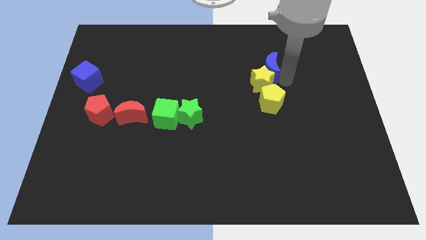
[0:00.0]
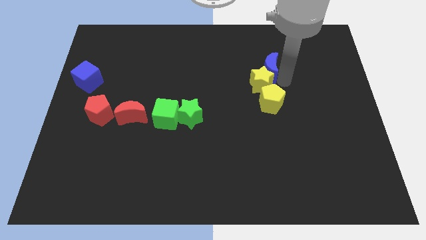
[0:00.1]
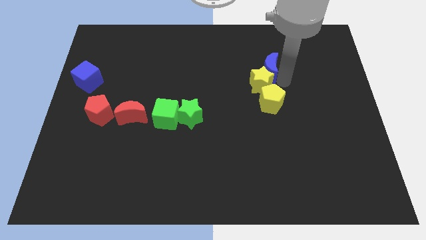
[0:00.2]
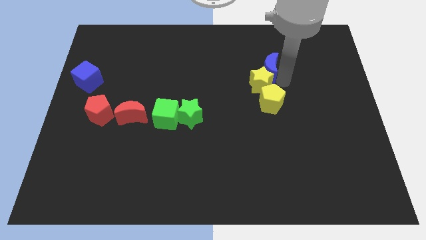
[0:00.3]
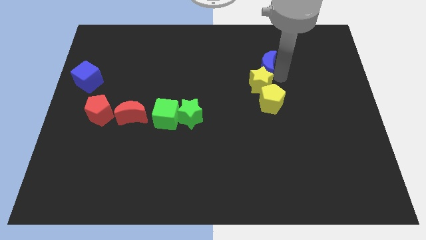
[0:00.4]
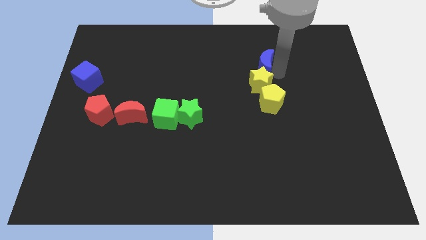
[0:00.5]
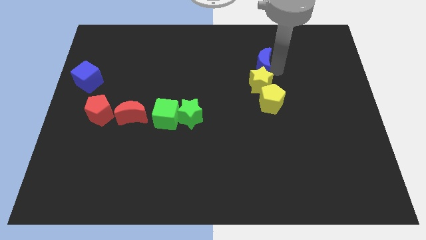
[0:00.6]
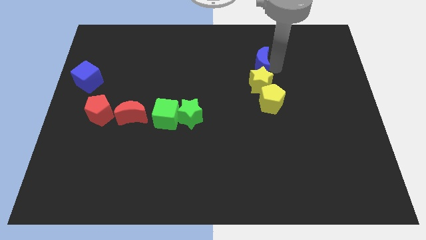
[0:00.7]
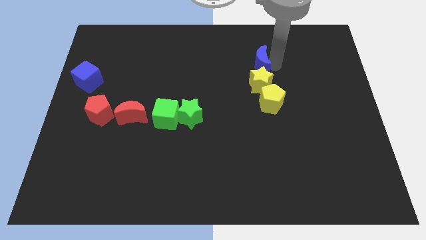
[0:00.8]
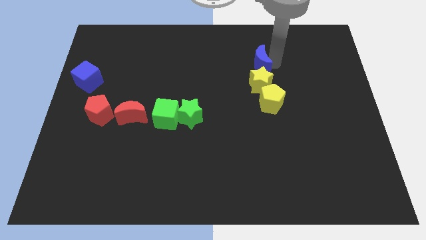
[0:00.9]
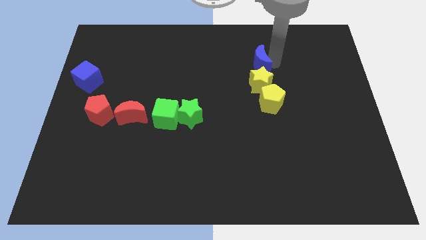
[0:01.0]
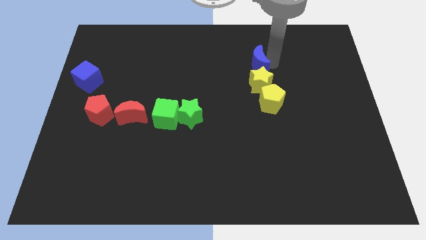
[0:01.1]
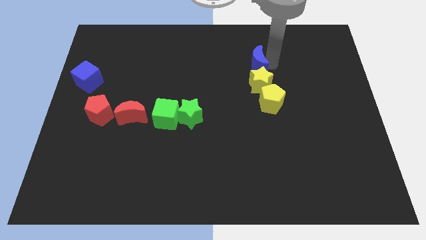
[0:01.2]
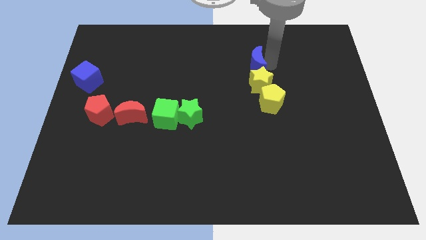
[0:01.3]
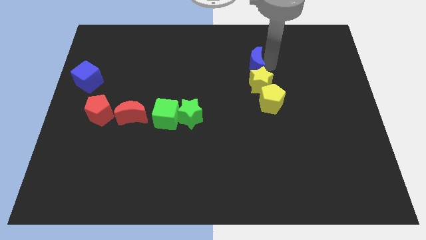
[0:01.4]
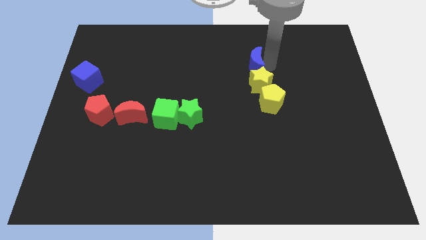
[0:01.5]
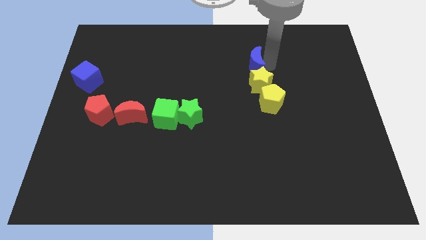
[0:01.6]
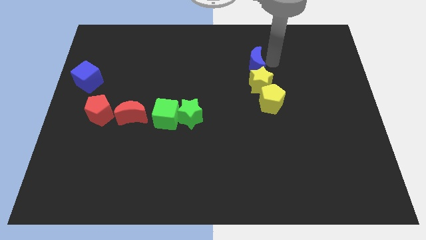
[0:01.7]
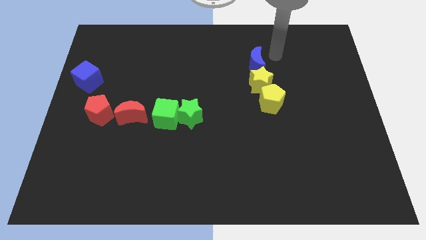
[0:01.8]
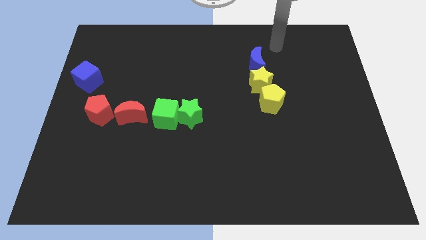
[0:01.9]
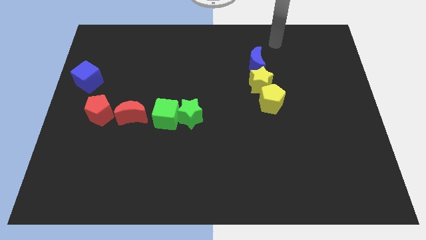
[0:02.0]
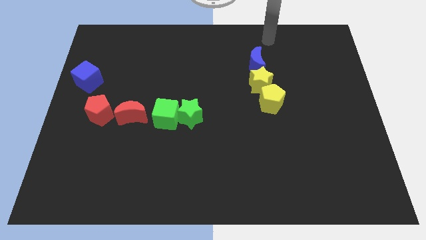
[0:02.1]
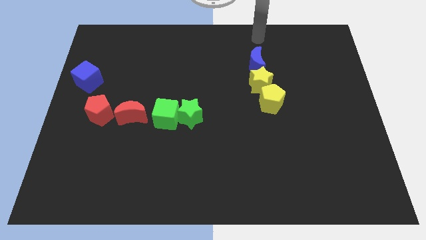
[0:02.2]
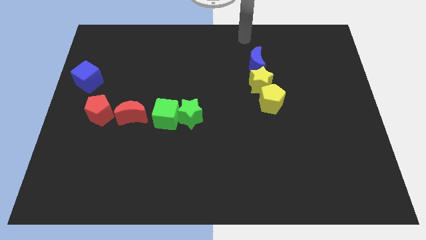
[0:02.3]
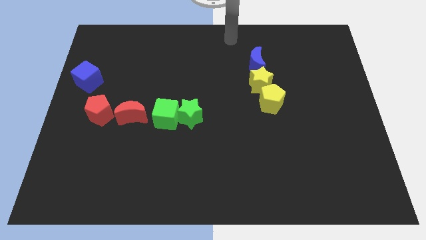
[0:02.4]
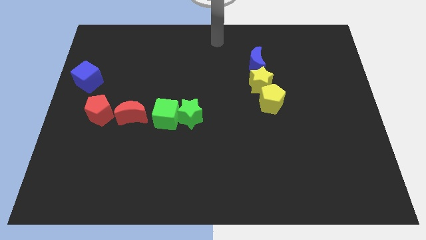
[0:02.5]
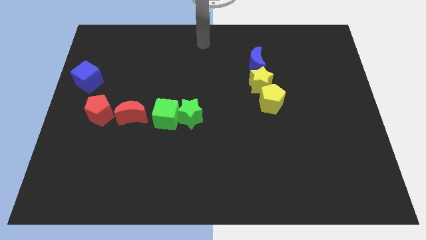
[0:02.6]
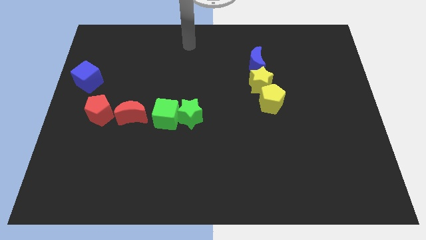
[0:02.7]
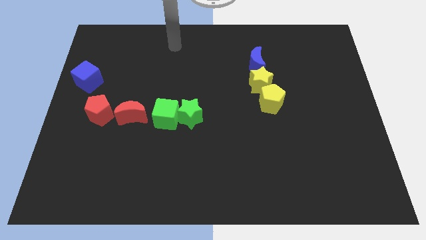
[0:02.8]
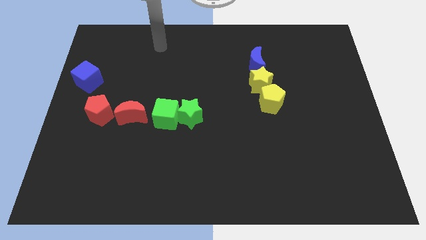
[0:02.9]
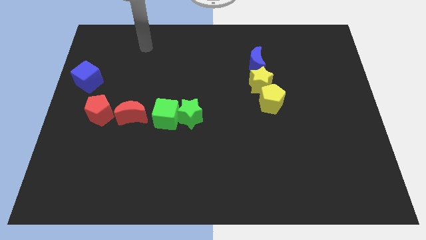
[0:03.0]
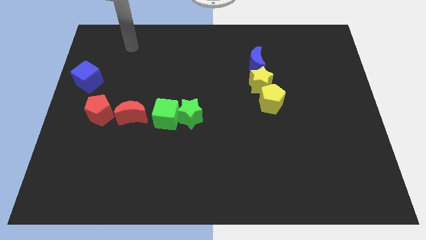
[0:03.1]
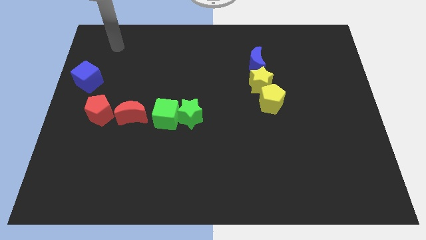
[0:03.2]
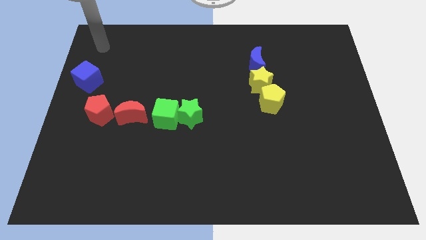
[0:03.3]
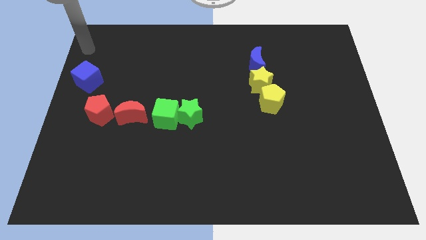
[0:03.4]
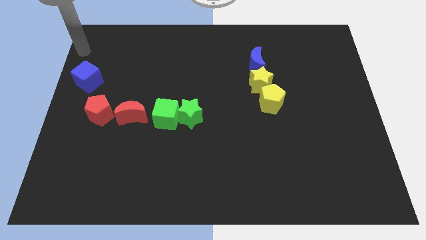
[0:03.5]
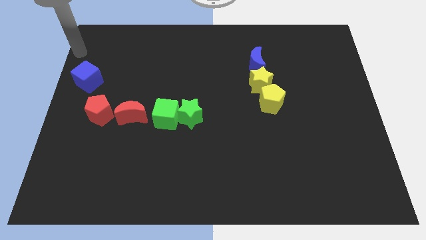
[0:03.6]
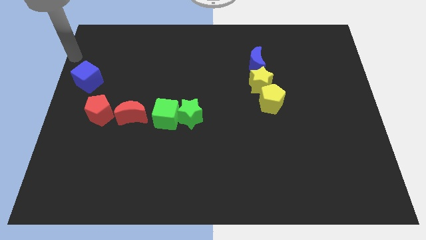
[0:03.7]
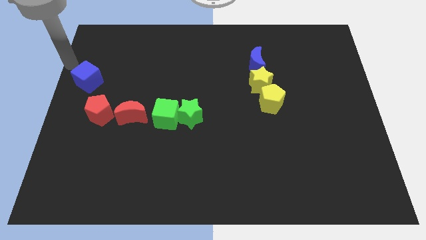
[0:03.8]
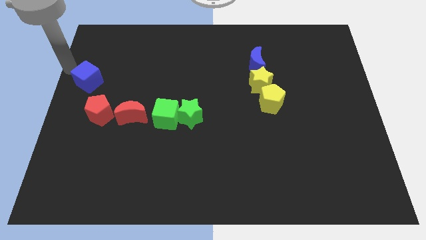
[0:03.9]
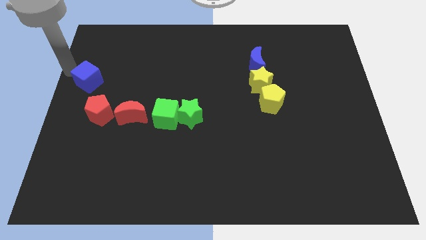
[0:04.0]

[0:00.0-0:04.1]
place the blue crescent above the yellow star

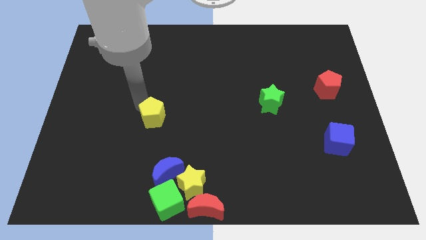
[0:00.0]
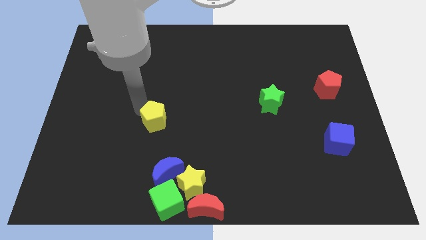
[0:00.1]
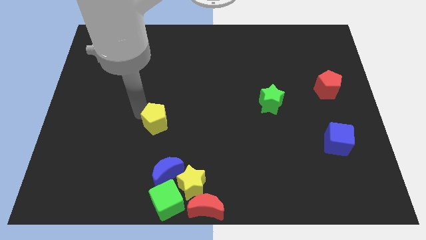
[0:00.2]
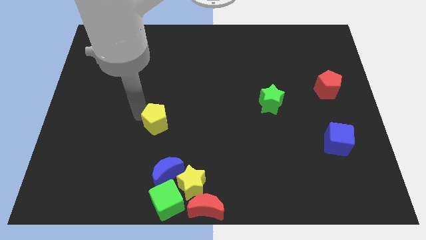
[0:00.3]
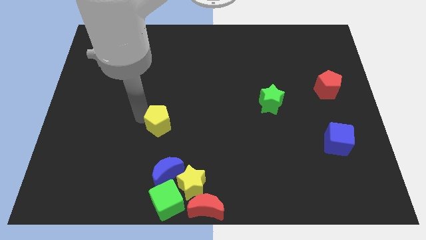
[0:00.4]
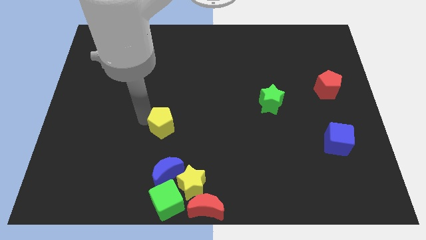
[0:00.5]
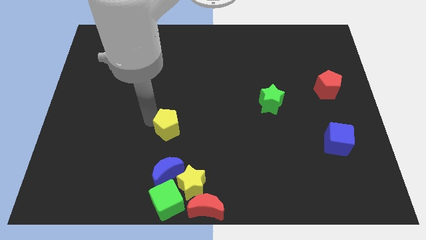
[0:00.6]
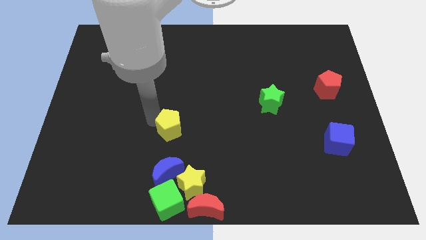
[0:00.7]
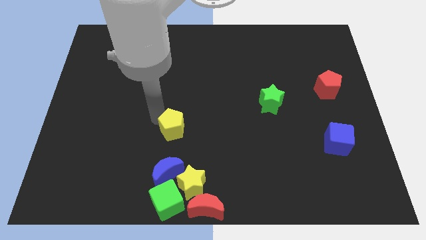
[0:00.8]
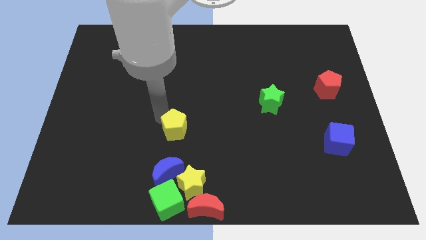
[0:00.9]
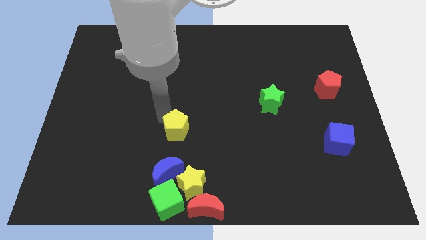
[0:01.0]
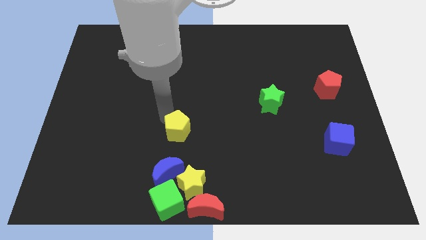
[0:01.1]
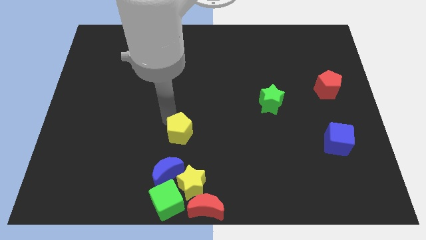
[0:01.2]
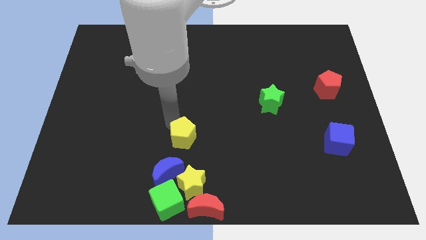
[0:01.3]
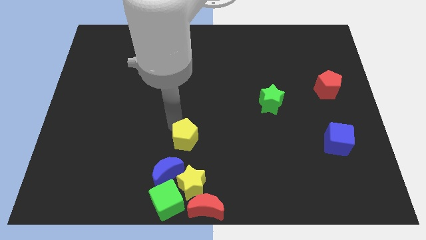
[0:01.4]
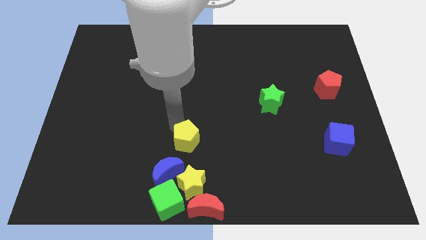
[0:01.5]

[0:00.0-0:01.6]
push the yellow pentagon towards the group of blocks

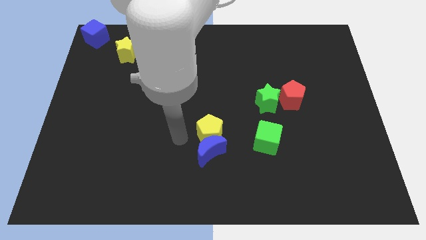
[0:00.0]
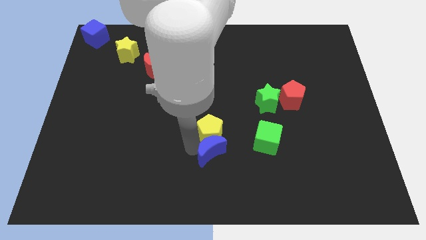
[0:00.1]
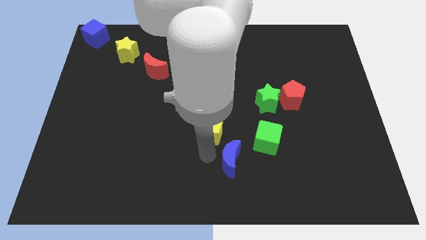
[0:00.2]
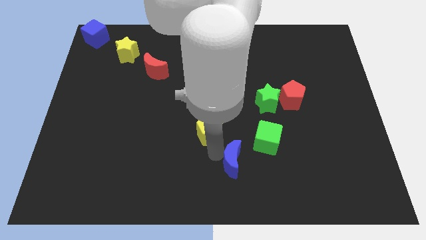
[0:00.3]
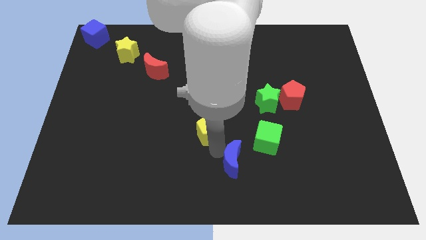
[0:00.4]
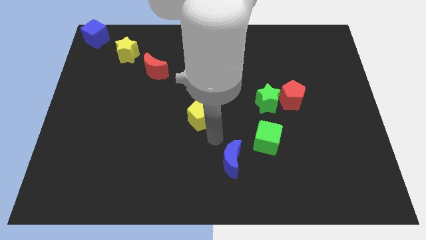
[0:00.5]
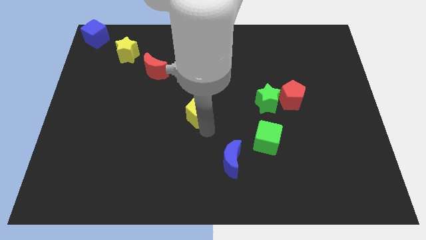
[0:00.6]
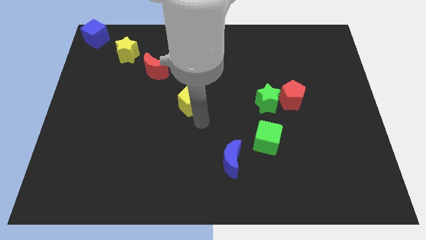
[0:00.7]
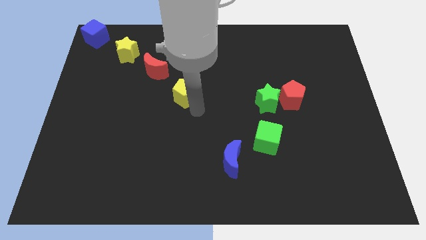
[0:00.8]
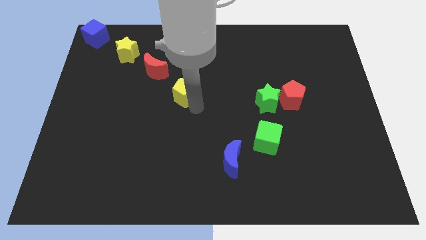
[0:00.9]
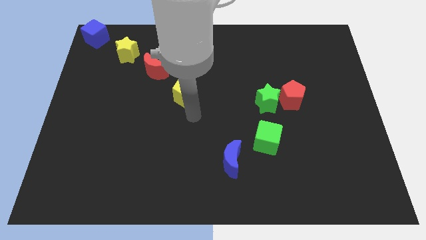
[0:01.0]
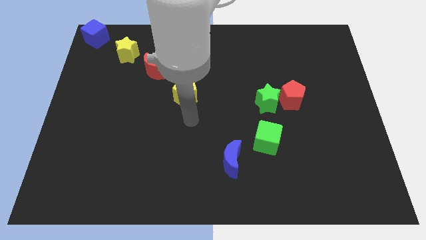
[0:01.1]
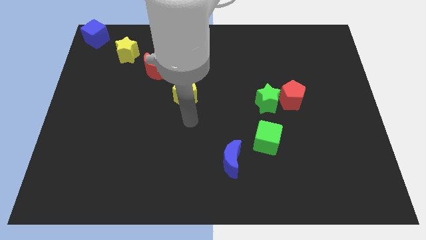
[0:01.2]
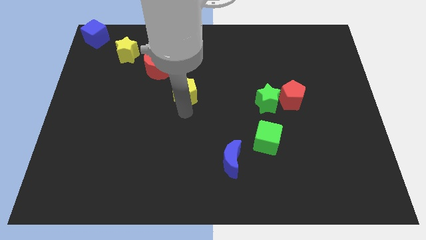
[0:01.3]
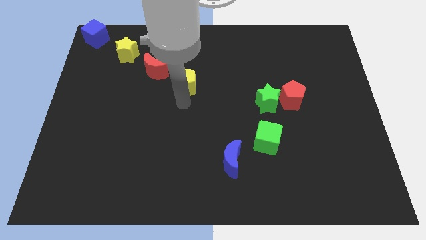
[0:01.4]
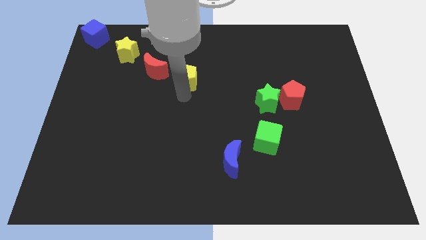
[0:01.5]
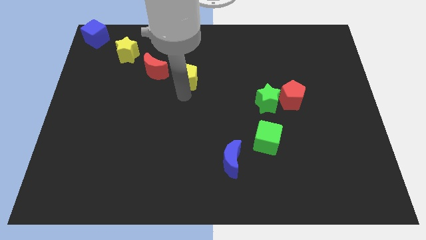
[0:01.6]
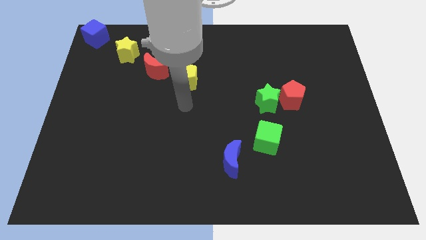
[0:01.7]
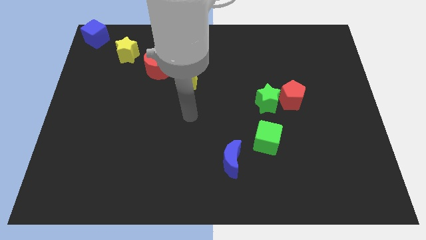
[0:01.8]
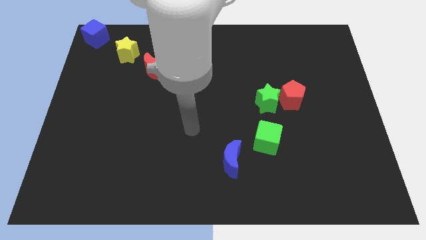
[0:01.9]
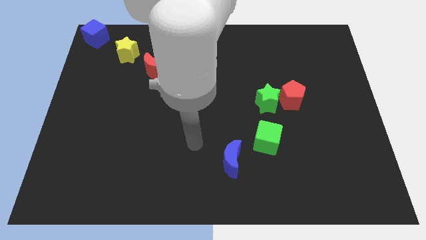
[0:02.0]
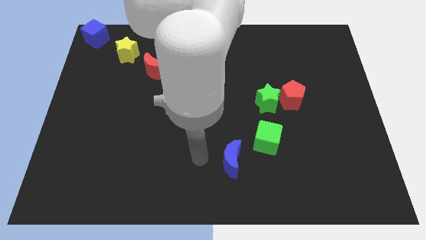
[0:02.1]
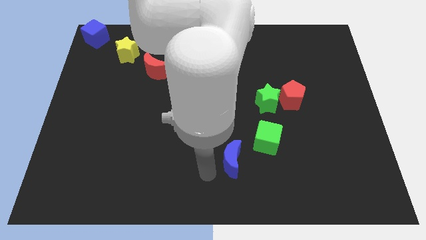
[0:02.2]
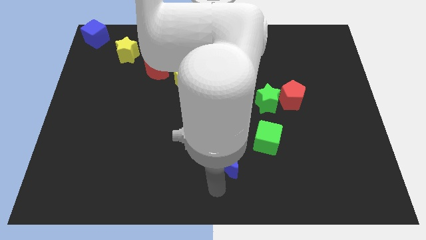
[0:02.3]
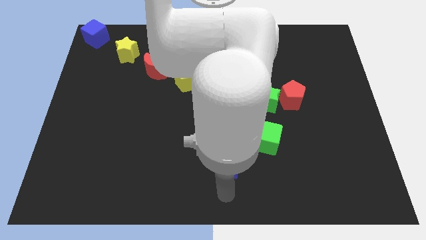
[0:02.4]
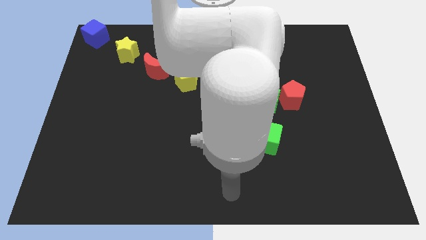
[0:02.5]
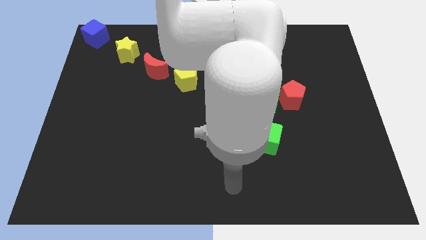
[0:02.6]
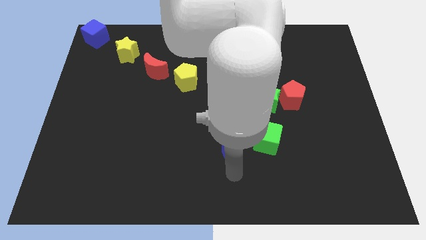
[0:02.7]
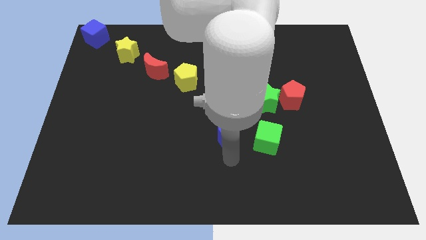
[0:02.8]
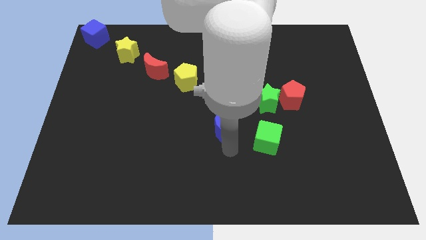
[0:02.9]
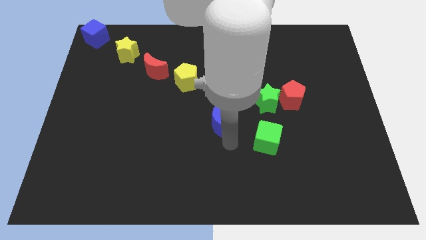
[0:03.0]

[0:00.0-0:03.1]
move blue moon towards the yellow pentagon

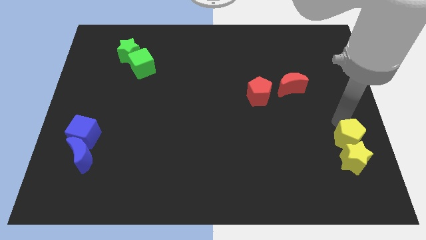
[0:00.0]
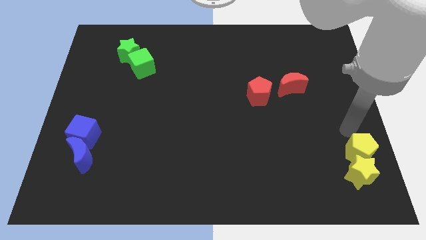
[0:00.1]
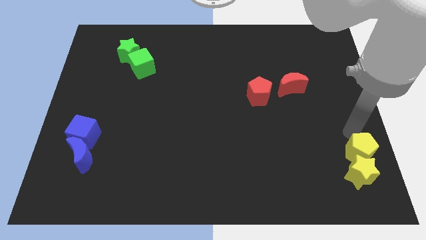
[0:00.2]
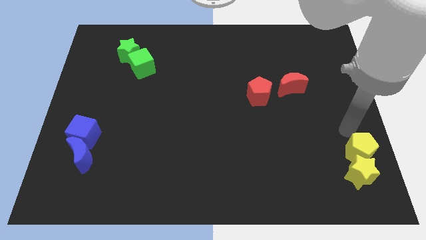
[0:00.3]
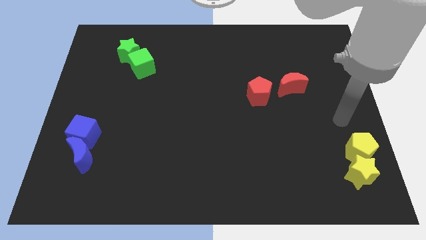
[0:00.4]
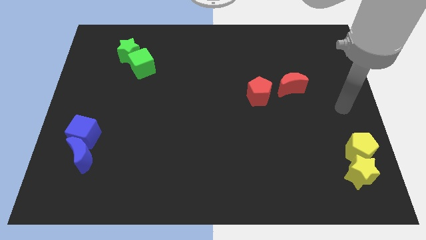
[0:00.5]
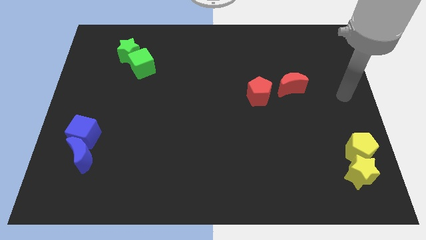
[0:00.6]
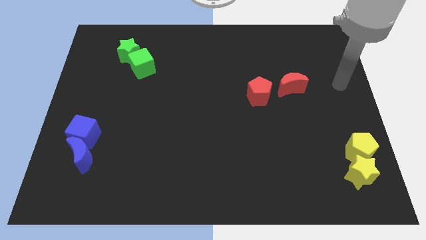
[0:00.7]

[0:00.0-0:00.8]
move yellow blocks slightly down
